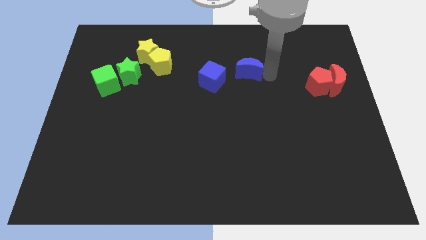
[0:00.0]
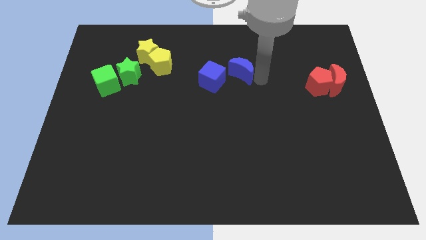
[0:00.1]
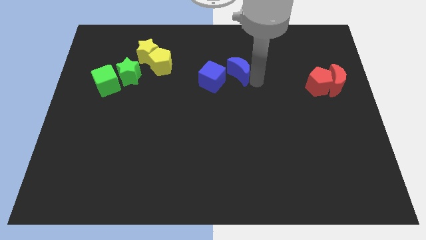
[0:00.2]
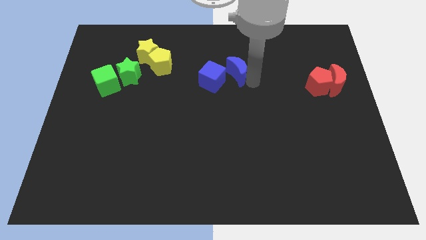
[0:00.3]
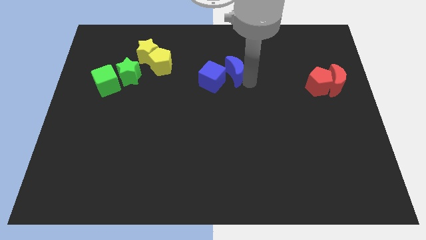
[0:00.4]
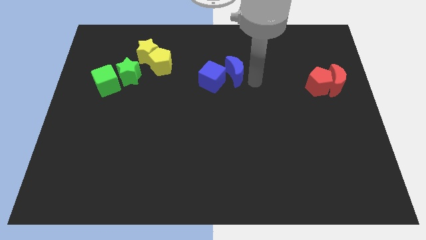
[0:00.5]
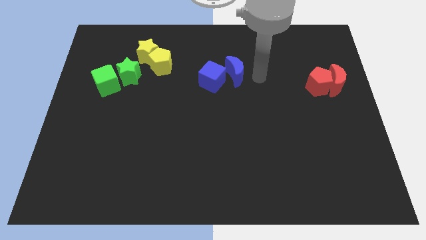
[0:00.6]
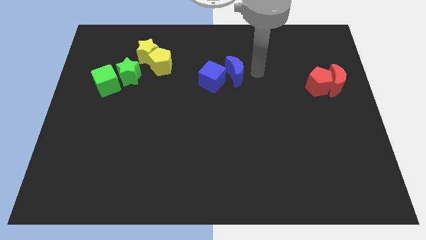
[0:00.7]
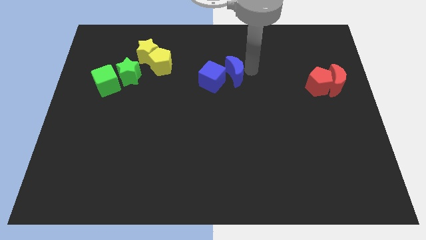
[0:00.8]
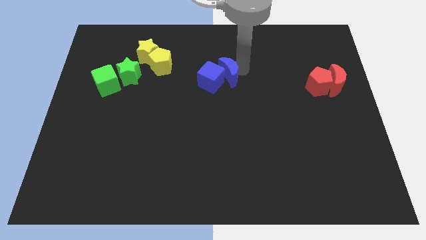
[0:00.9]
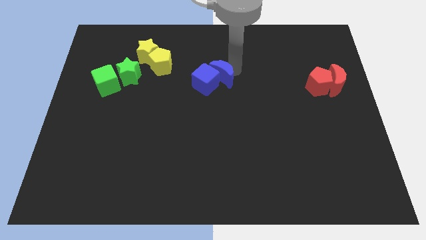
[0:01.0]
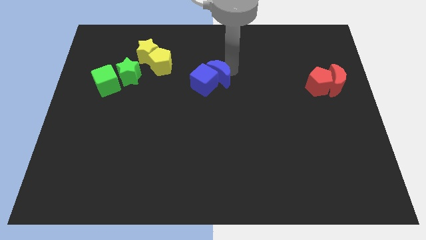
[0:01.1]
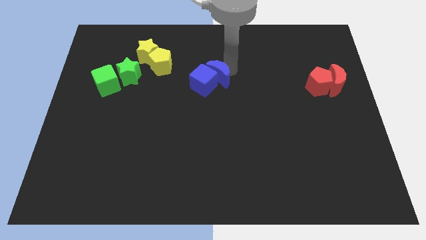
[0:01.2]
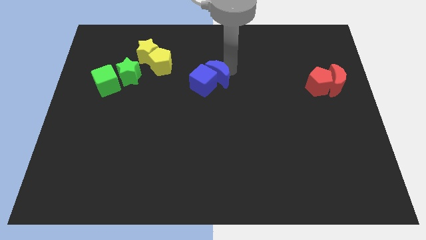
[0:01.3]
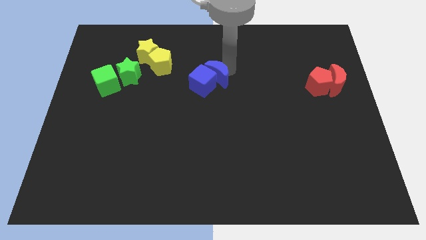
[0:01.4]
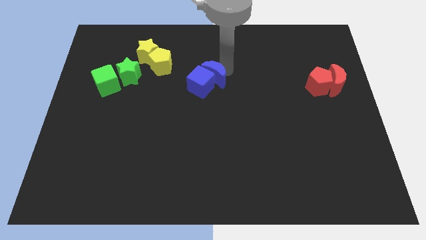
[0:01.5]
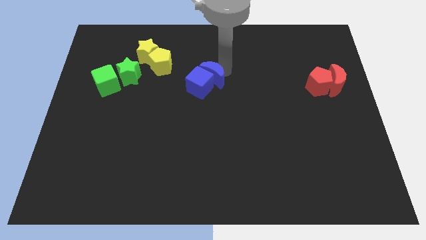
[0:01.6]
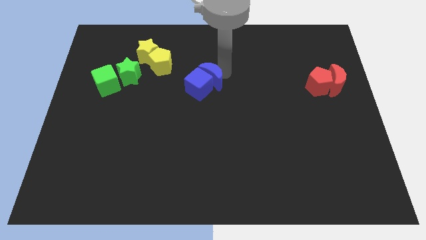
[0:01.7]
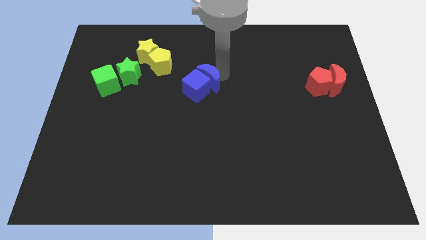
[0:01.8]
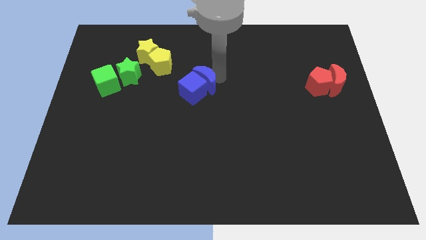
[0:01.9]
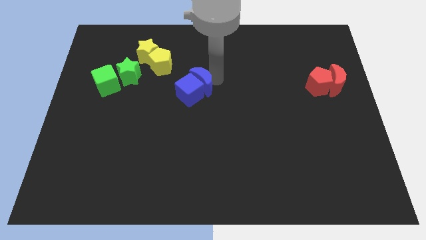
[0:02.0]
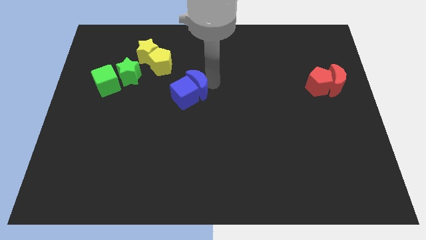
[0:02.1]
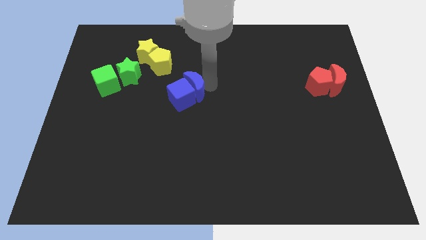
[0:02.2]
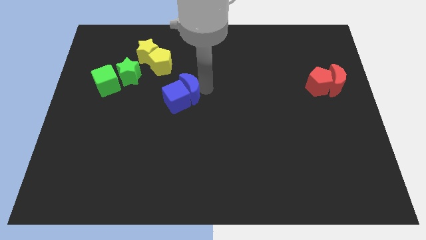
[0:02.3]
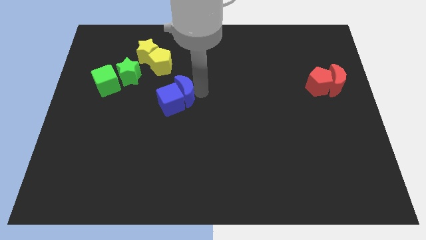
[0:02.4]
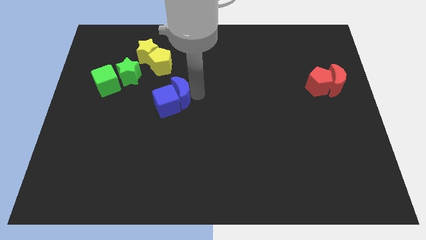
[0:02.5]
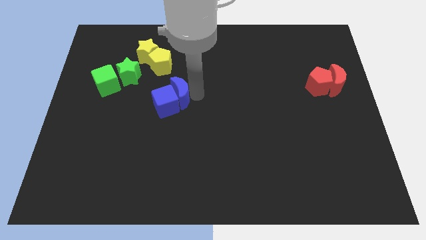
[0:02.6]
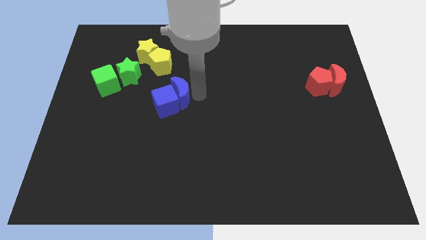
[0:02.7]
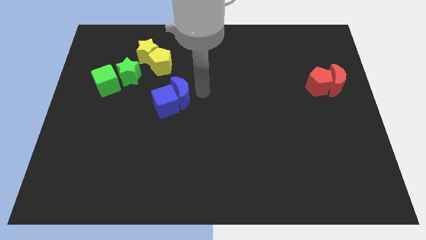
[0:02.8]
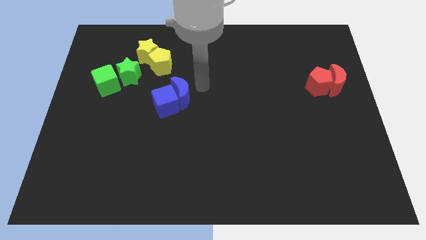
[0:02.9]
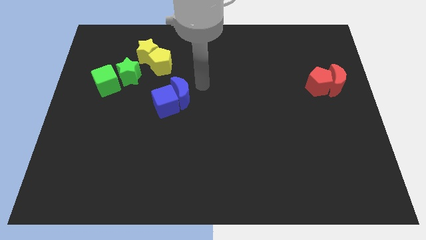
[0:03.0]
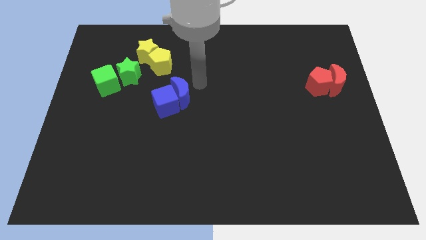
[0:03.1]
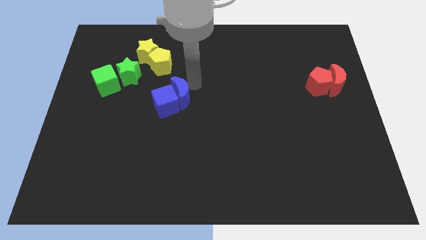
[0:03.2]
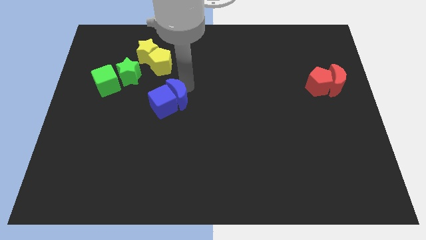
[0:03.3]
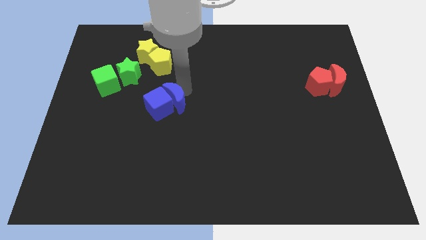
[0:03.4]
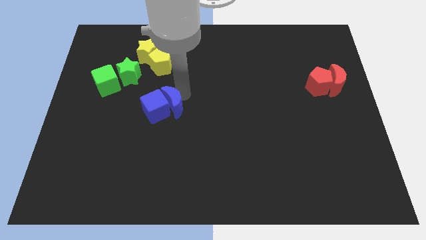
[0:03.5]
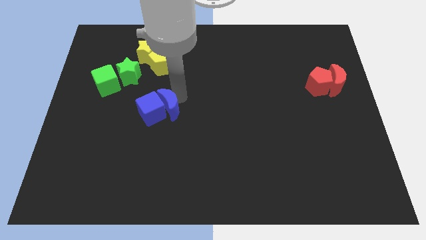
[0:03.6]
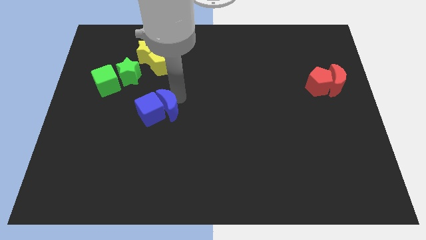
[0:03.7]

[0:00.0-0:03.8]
move the blue crescent into the blue moon to the bottom right side of the green blocks

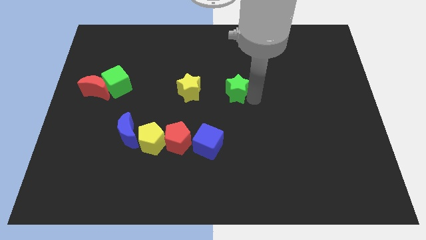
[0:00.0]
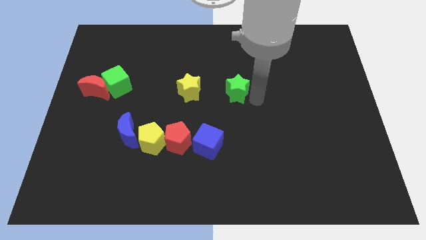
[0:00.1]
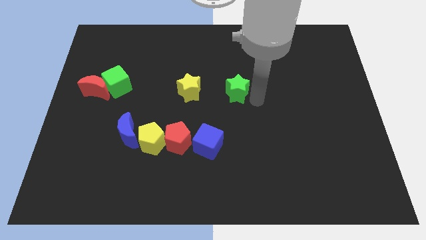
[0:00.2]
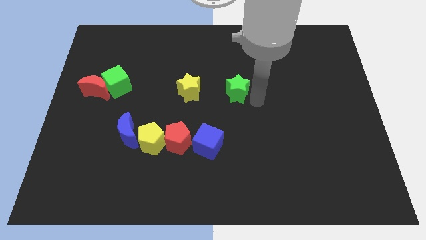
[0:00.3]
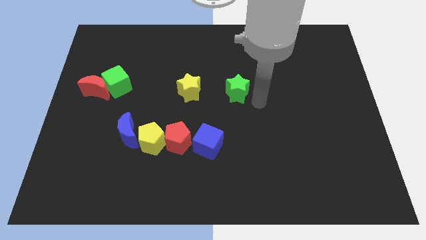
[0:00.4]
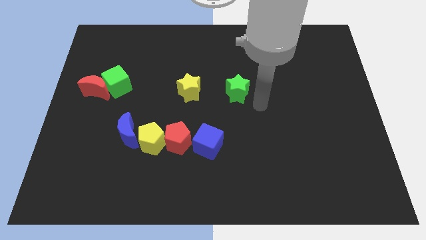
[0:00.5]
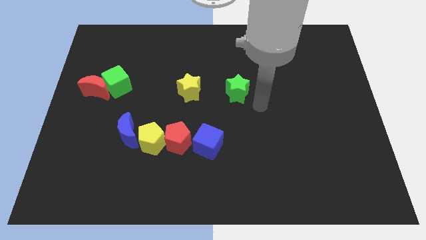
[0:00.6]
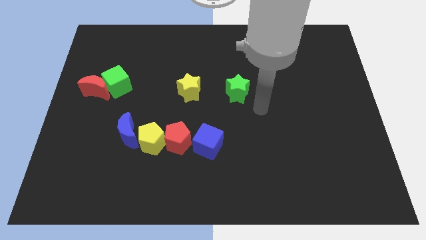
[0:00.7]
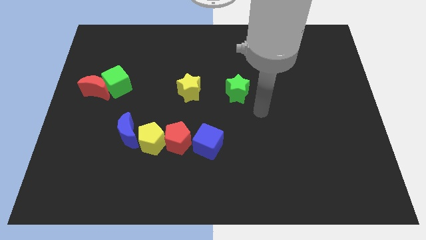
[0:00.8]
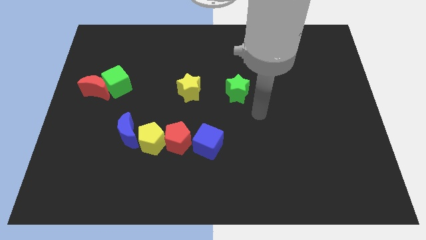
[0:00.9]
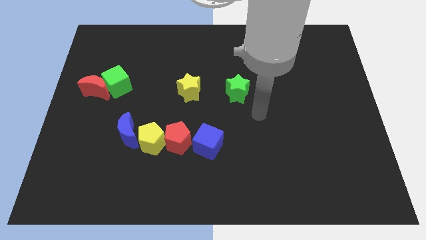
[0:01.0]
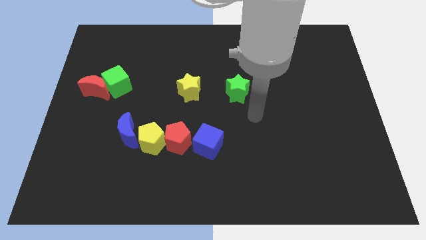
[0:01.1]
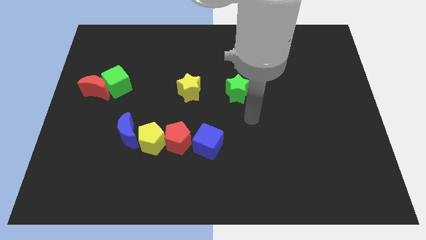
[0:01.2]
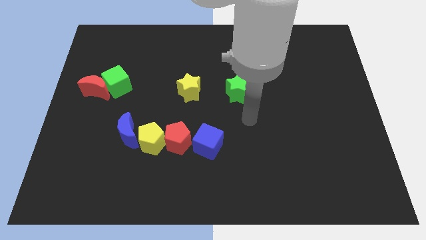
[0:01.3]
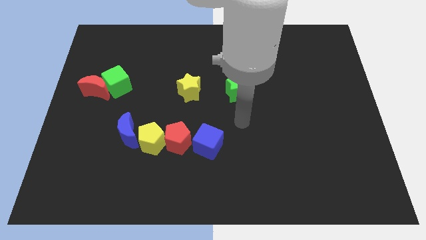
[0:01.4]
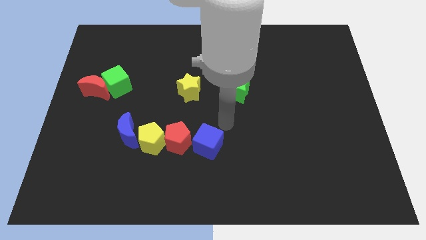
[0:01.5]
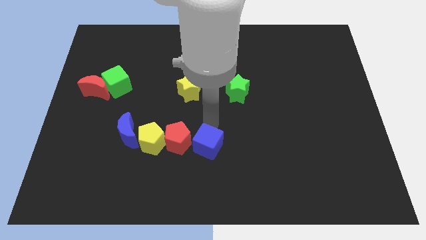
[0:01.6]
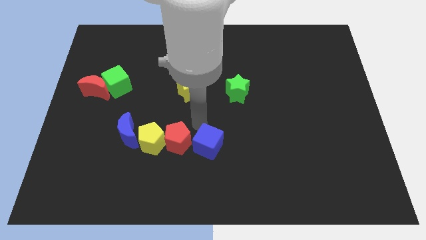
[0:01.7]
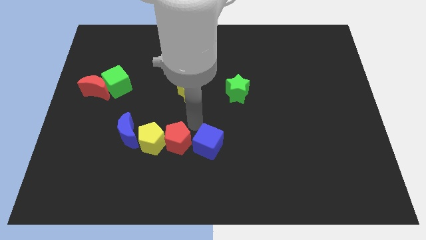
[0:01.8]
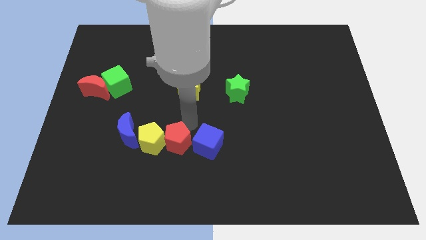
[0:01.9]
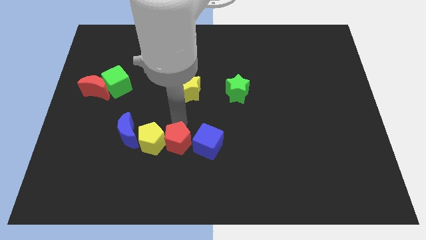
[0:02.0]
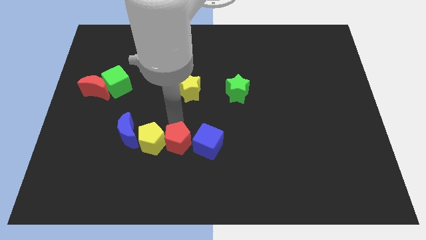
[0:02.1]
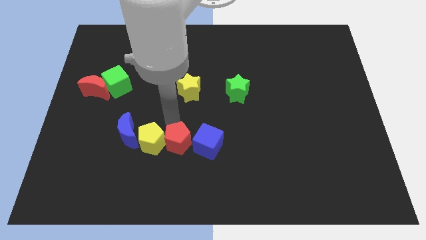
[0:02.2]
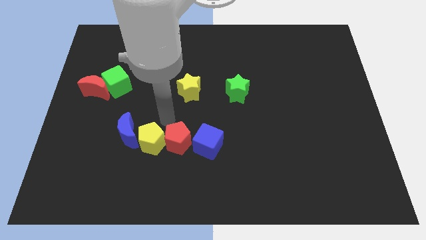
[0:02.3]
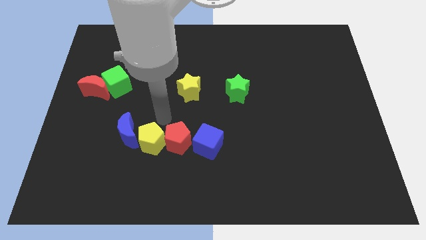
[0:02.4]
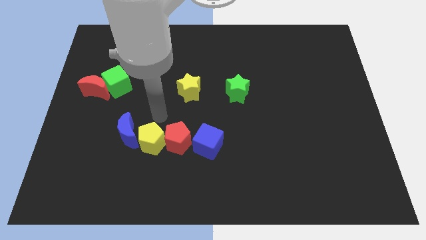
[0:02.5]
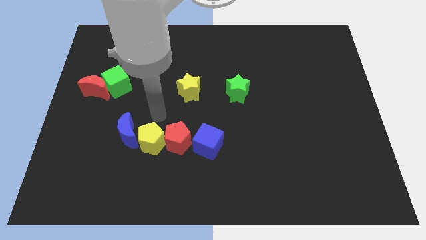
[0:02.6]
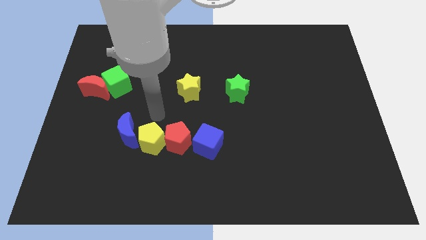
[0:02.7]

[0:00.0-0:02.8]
move the arm to the top of the yellow pentagon

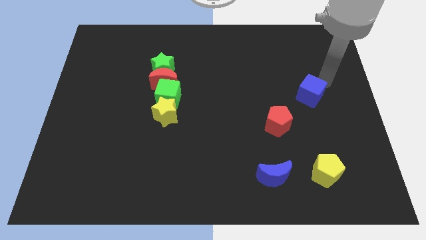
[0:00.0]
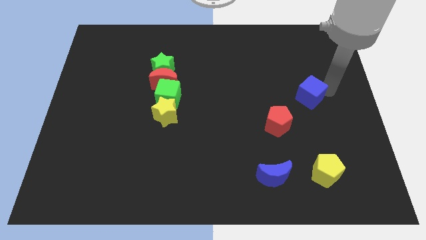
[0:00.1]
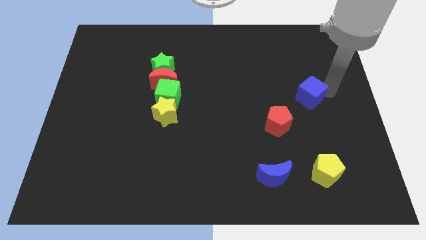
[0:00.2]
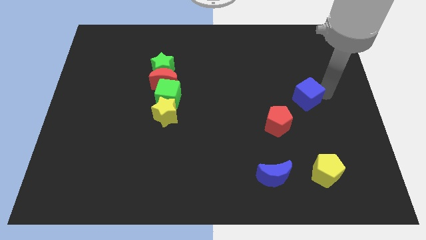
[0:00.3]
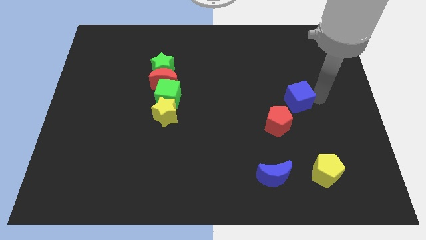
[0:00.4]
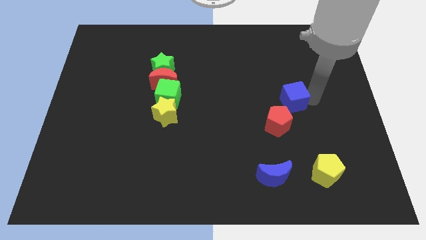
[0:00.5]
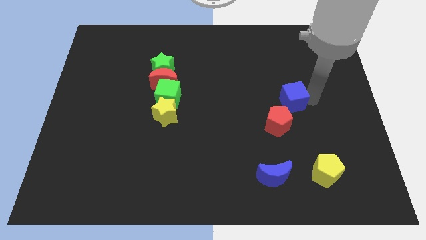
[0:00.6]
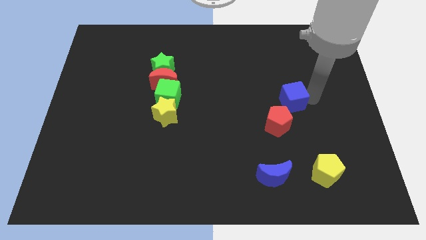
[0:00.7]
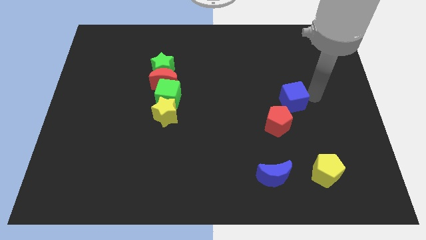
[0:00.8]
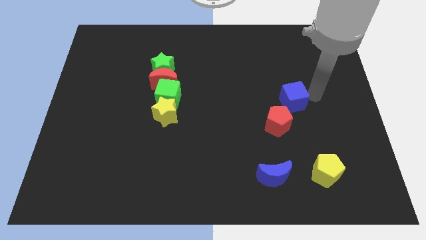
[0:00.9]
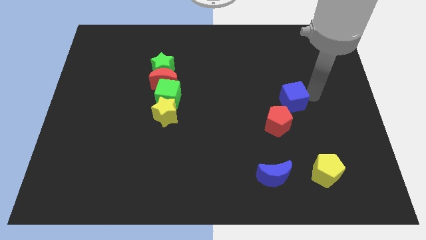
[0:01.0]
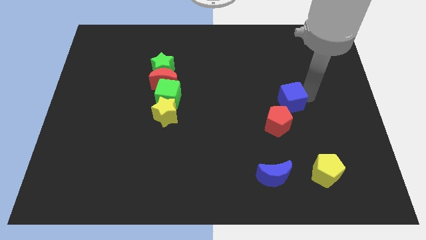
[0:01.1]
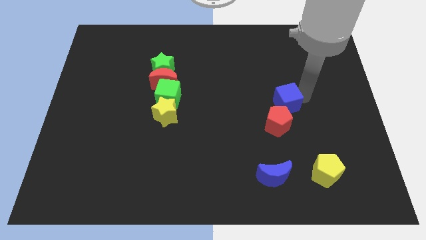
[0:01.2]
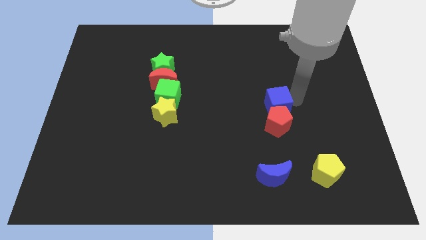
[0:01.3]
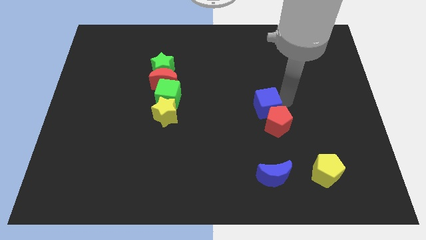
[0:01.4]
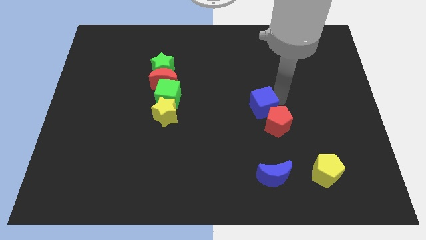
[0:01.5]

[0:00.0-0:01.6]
place blue cube above red pentagon

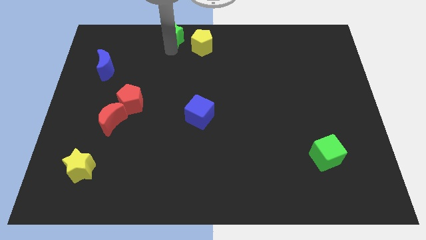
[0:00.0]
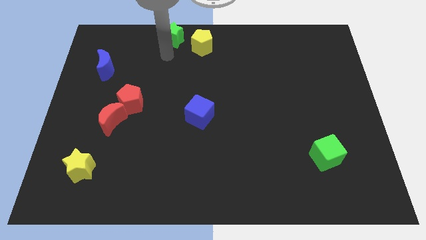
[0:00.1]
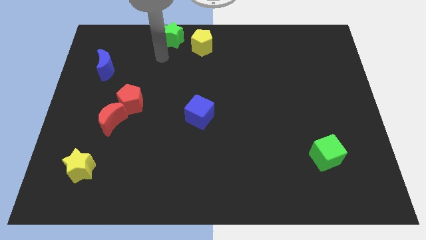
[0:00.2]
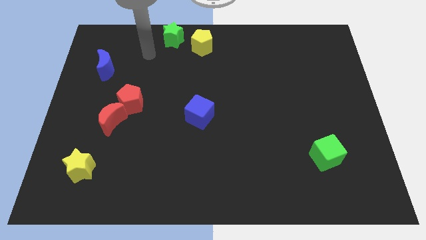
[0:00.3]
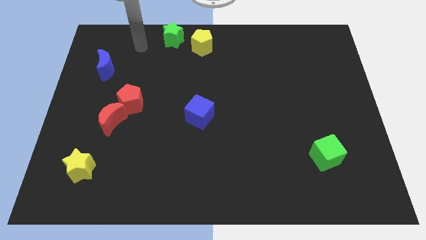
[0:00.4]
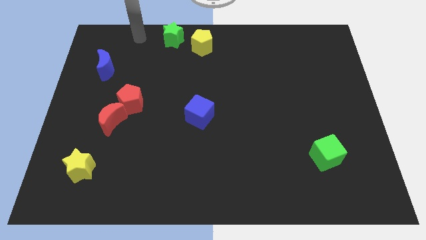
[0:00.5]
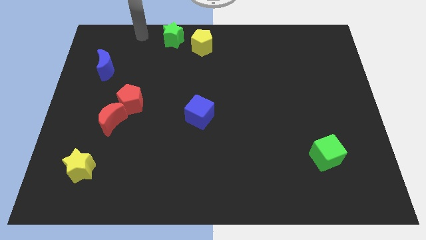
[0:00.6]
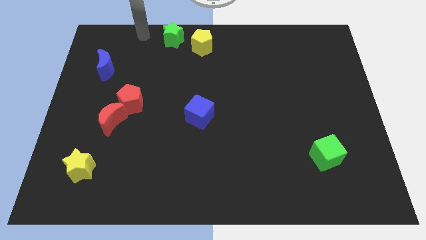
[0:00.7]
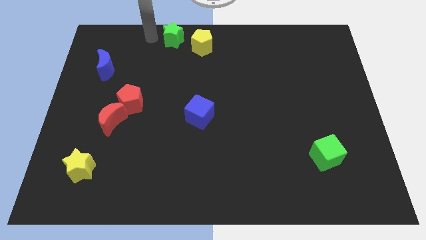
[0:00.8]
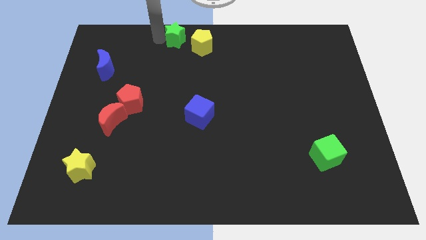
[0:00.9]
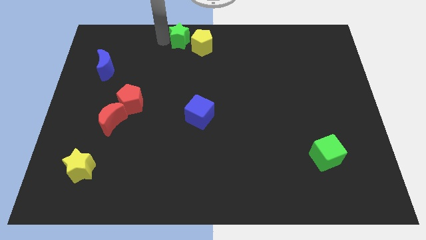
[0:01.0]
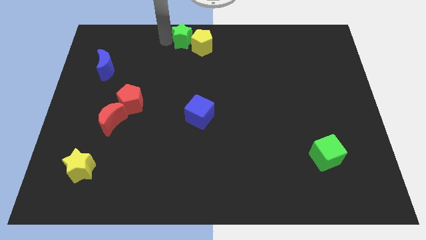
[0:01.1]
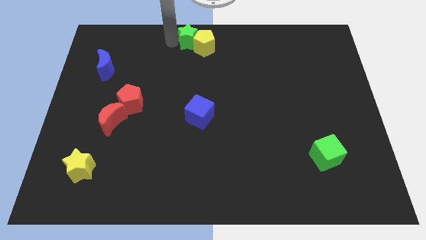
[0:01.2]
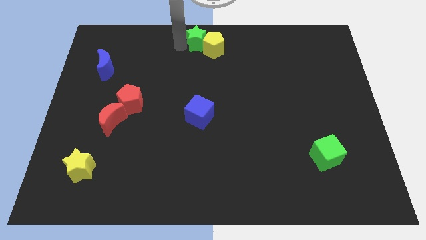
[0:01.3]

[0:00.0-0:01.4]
move the green star into the yellow pentagon
